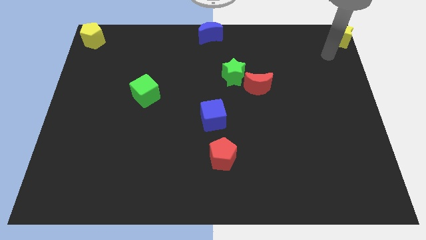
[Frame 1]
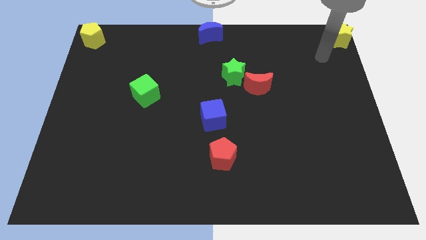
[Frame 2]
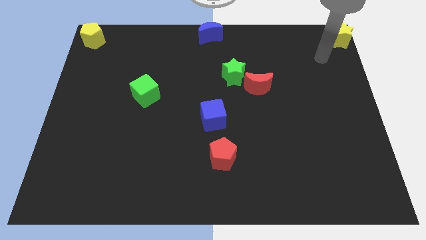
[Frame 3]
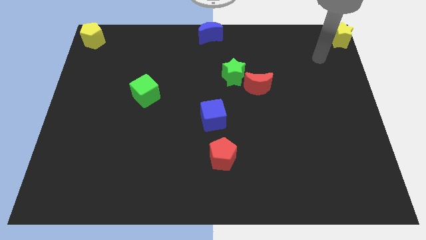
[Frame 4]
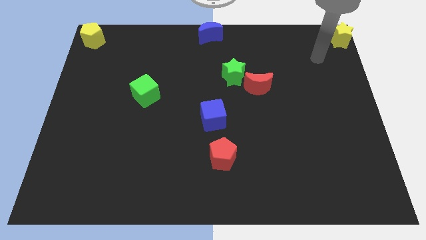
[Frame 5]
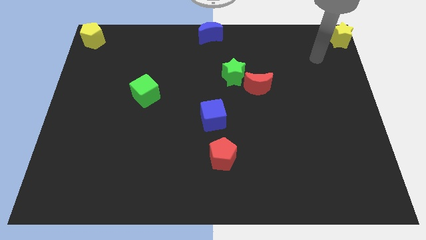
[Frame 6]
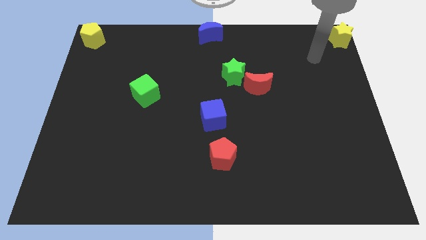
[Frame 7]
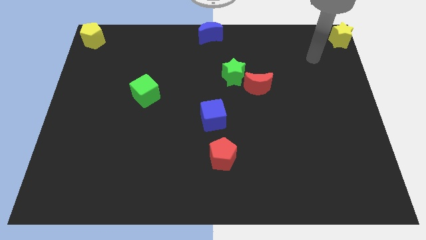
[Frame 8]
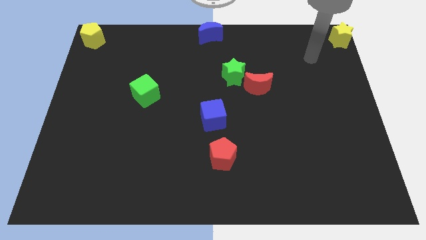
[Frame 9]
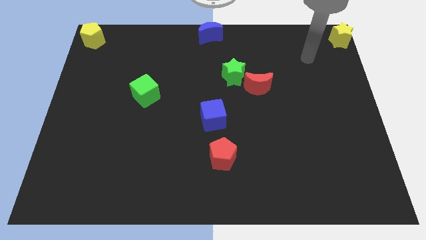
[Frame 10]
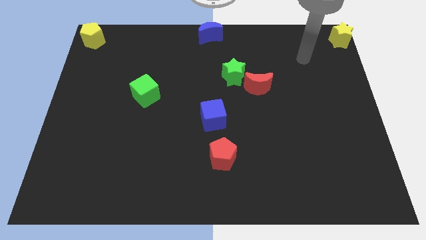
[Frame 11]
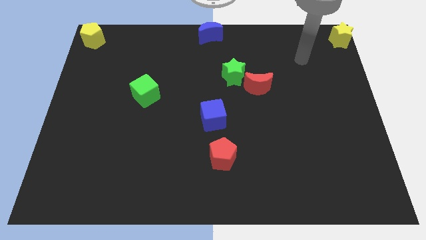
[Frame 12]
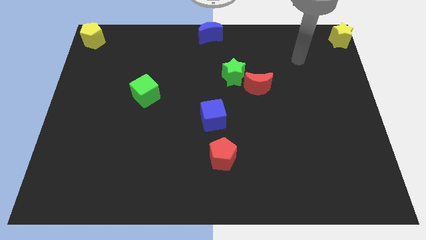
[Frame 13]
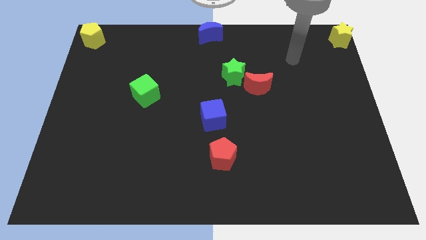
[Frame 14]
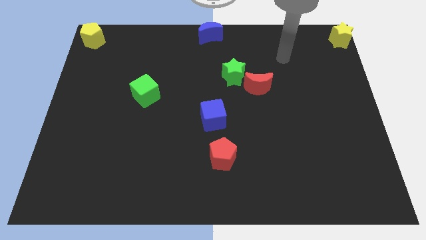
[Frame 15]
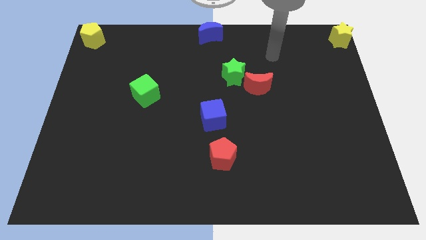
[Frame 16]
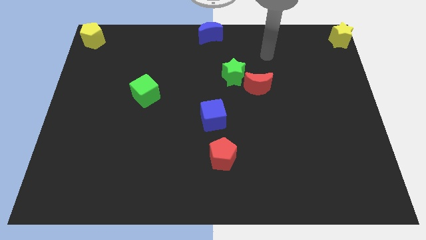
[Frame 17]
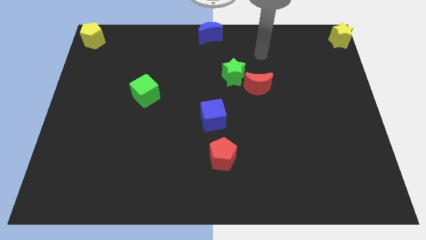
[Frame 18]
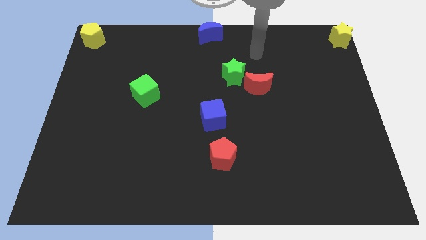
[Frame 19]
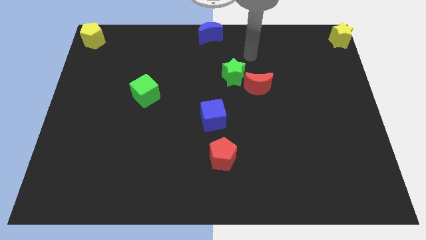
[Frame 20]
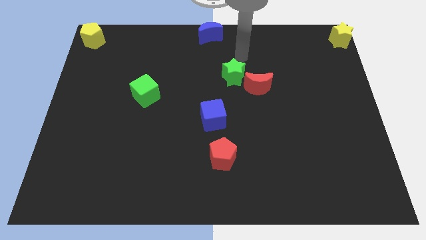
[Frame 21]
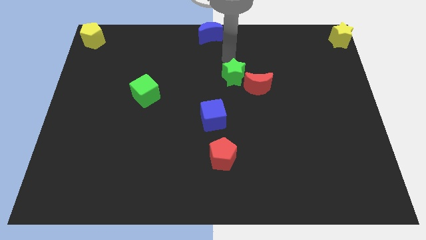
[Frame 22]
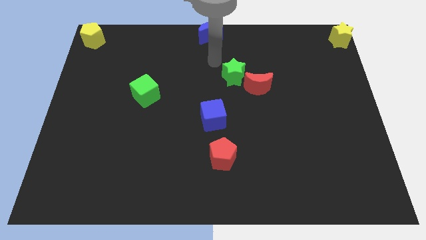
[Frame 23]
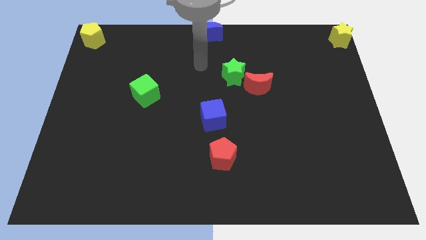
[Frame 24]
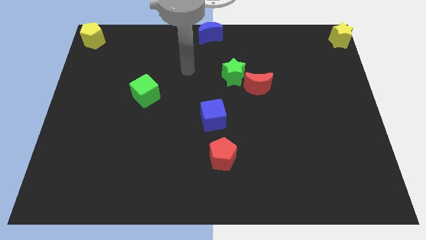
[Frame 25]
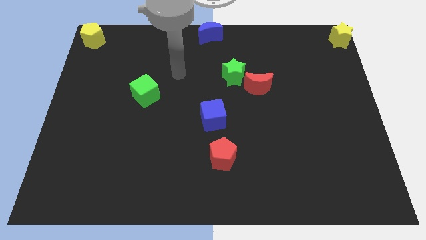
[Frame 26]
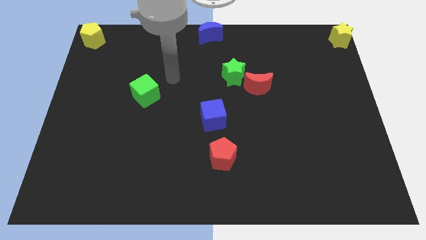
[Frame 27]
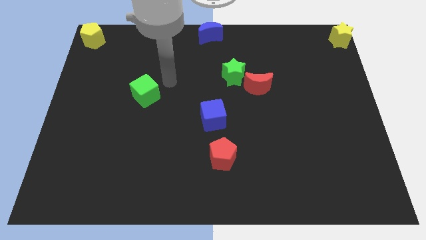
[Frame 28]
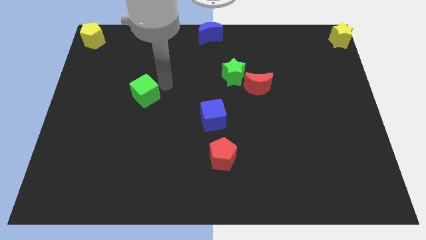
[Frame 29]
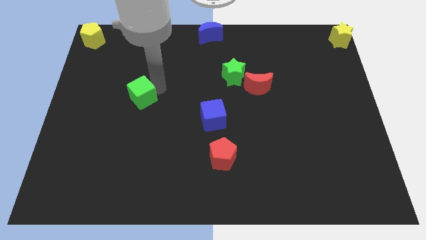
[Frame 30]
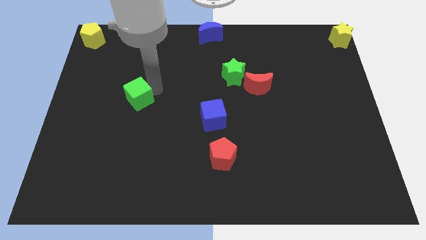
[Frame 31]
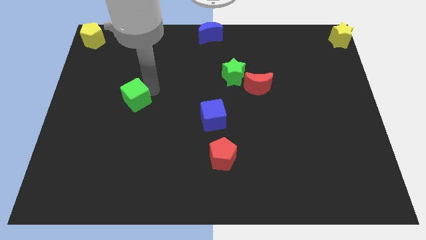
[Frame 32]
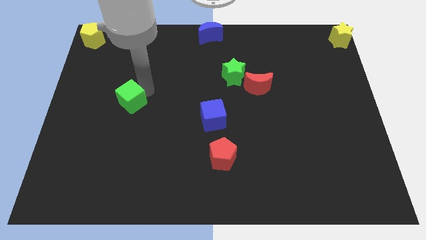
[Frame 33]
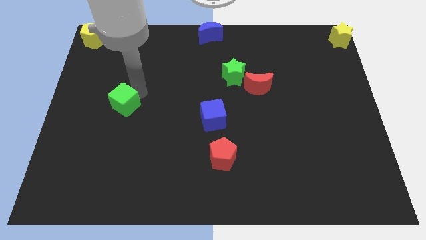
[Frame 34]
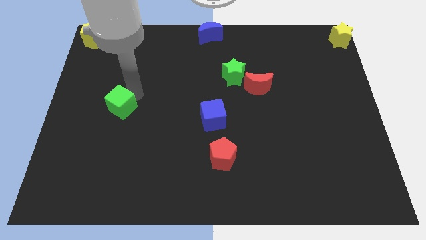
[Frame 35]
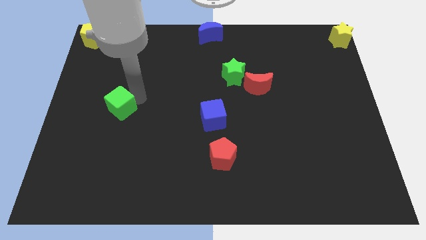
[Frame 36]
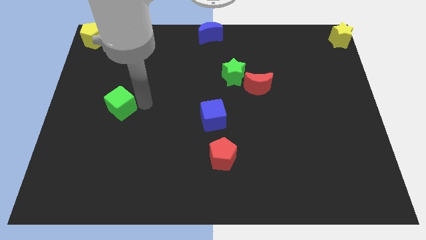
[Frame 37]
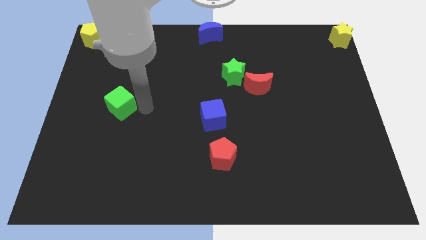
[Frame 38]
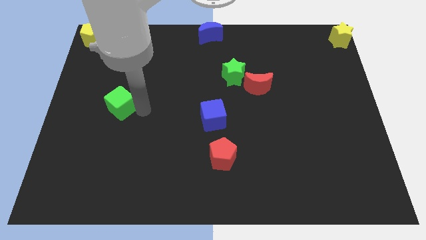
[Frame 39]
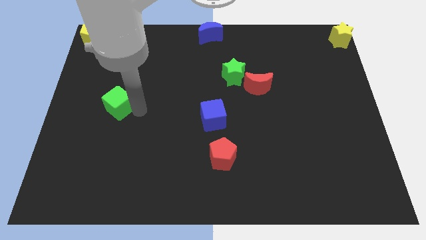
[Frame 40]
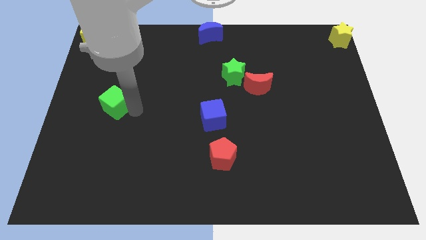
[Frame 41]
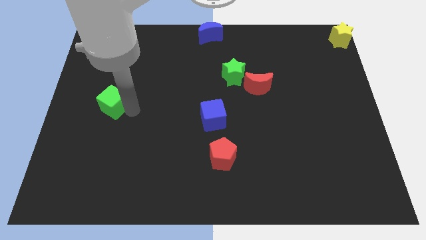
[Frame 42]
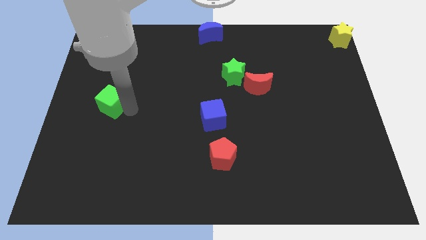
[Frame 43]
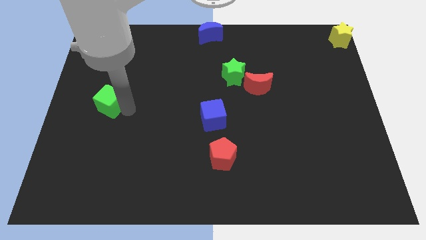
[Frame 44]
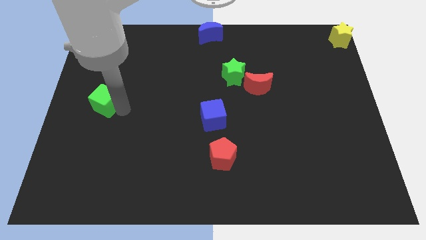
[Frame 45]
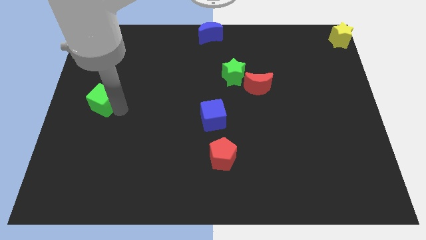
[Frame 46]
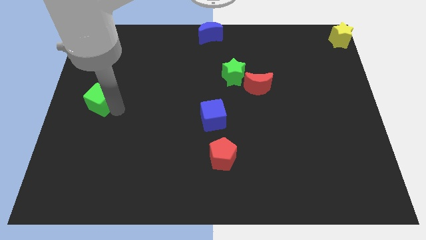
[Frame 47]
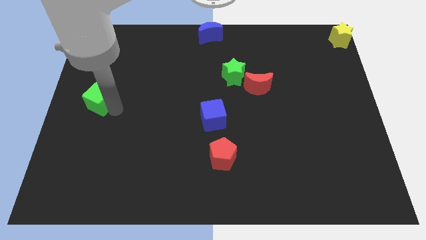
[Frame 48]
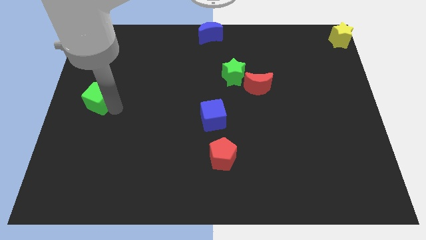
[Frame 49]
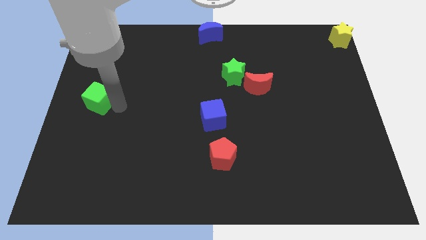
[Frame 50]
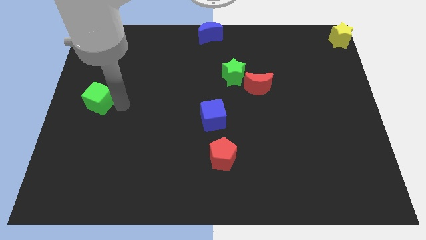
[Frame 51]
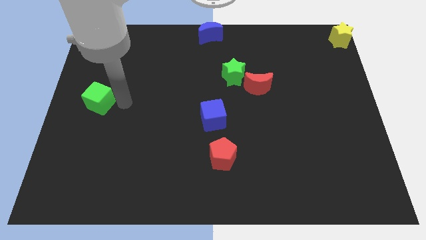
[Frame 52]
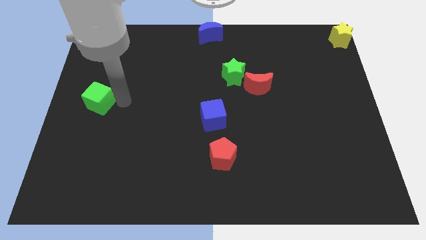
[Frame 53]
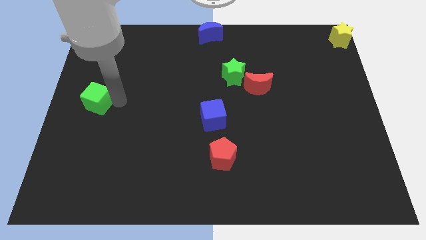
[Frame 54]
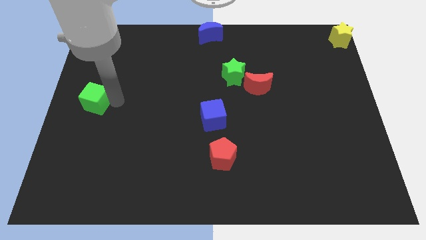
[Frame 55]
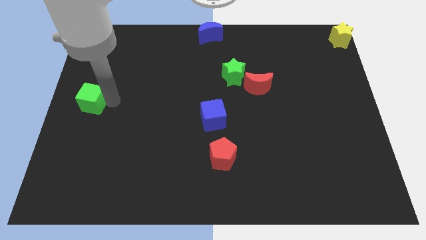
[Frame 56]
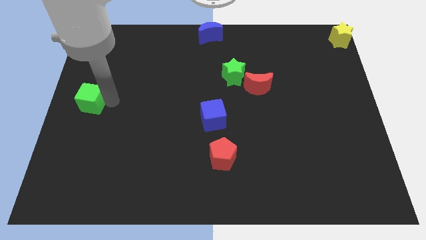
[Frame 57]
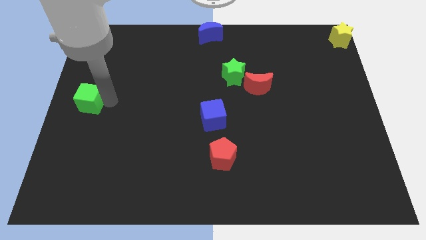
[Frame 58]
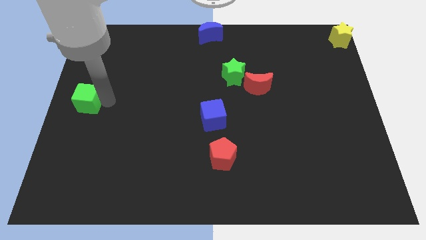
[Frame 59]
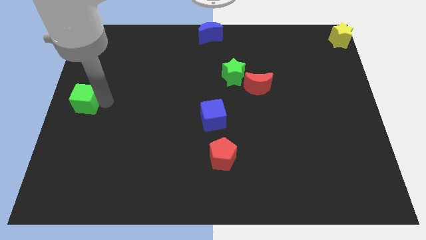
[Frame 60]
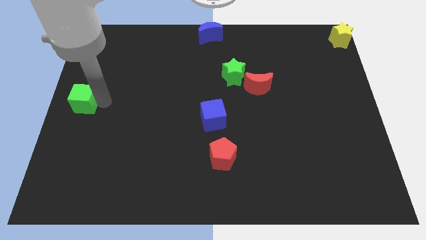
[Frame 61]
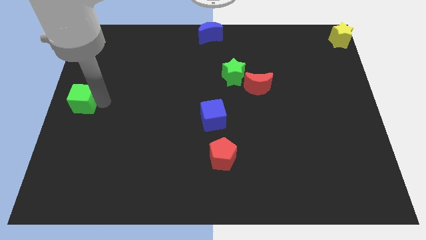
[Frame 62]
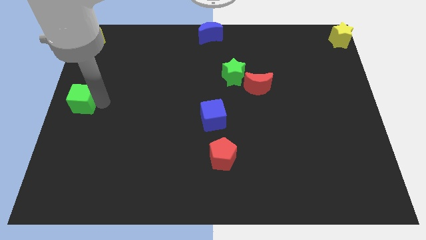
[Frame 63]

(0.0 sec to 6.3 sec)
move the green cube to the left center of the board

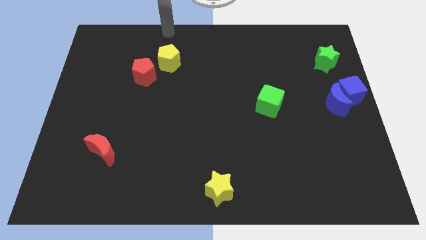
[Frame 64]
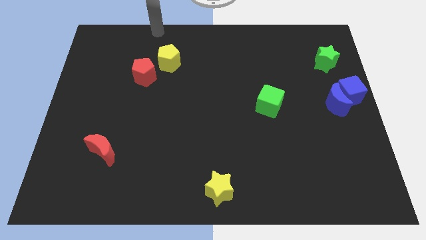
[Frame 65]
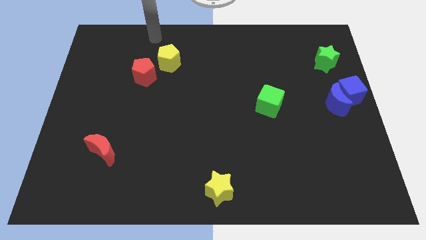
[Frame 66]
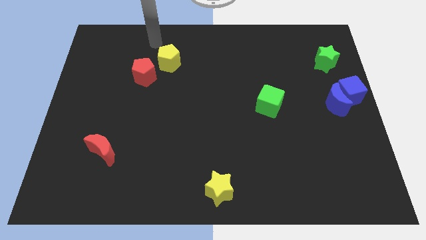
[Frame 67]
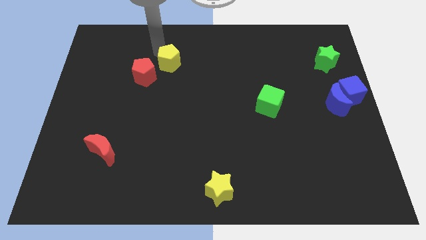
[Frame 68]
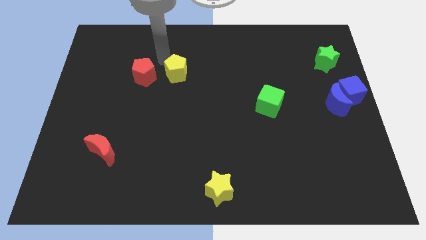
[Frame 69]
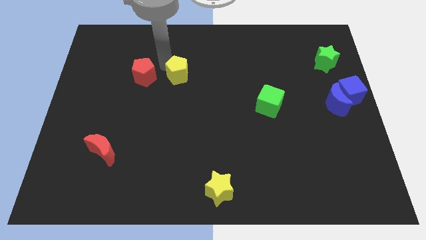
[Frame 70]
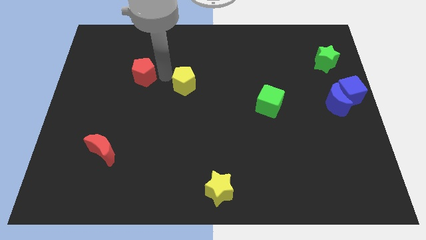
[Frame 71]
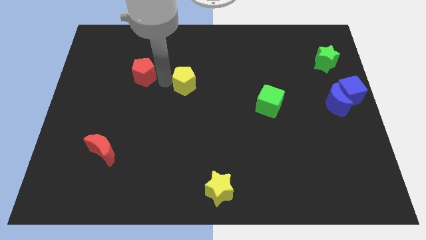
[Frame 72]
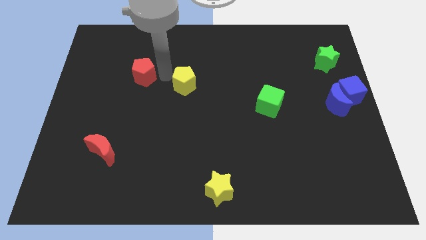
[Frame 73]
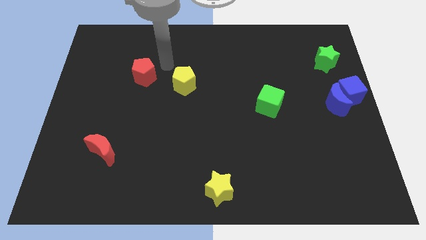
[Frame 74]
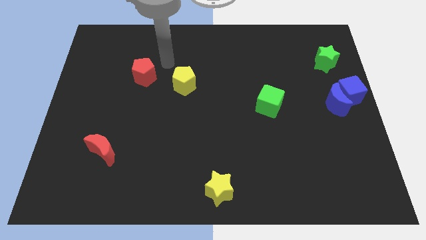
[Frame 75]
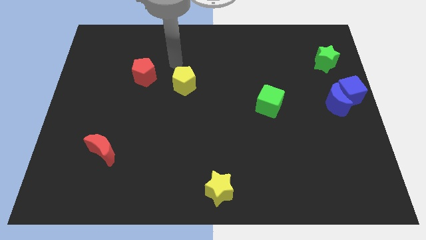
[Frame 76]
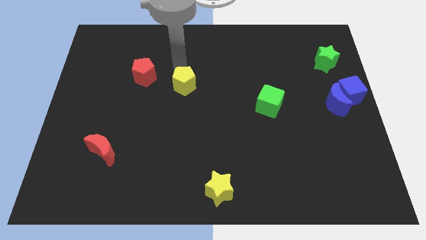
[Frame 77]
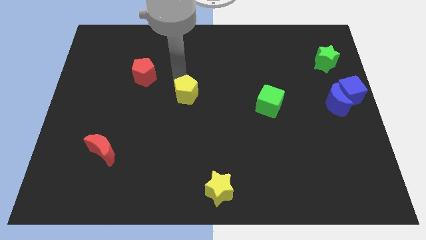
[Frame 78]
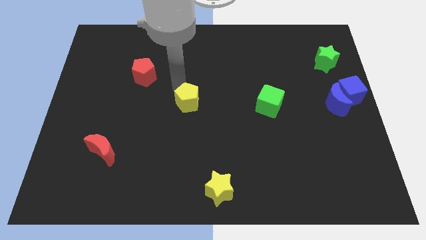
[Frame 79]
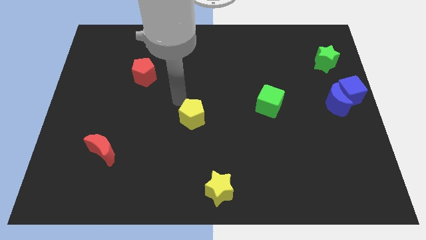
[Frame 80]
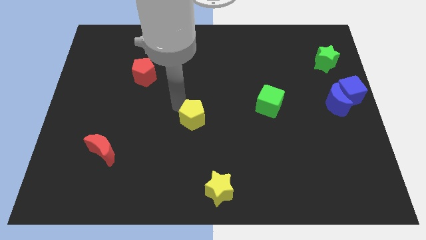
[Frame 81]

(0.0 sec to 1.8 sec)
place the yellow pentagon diagonally top right to red moon

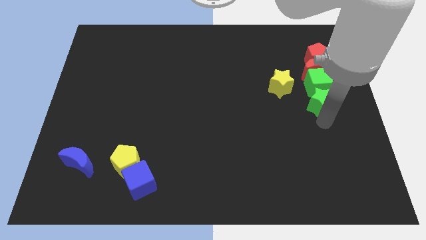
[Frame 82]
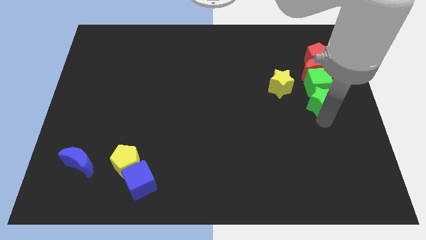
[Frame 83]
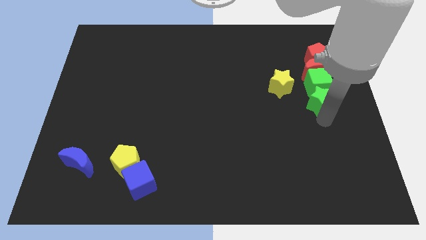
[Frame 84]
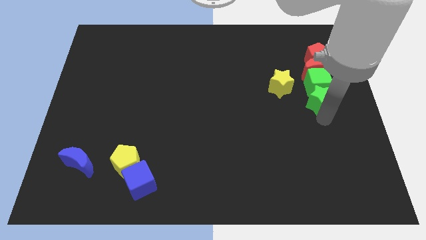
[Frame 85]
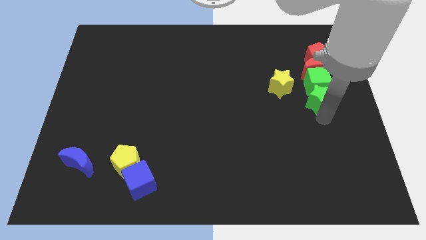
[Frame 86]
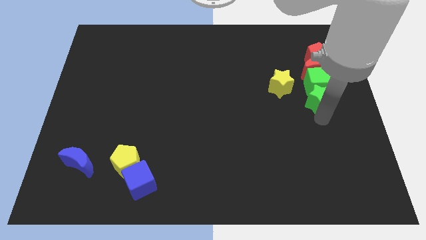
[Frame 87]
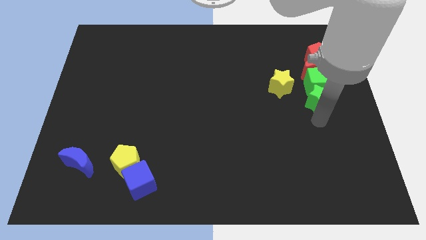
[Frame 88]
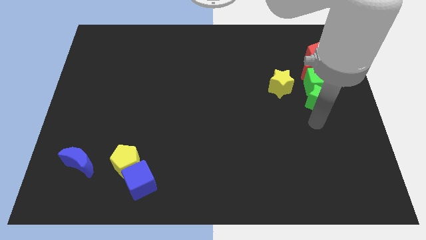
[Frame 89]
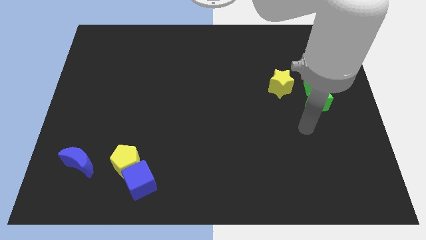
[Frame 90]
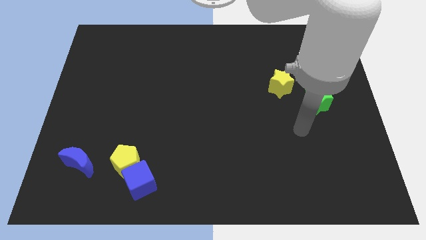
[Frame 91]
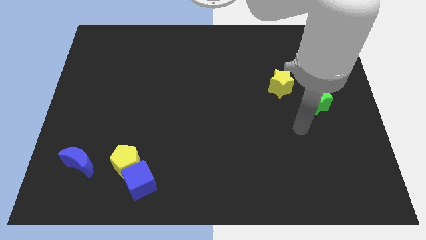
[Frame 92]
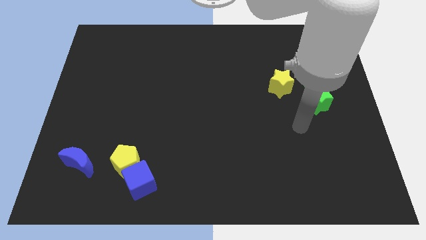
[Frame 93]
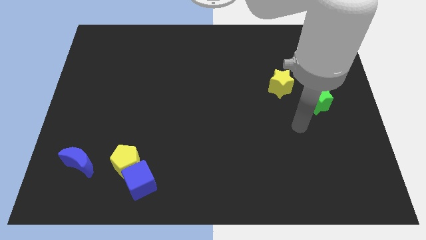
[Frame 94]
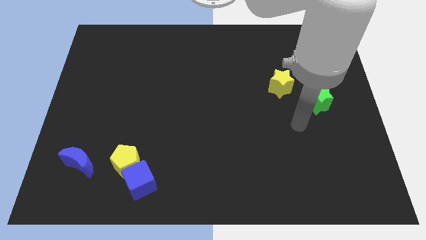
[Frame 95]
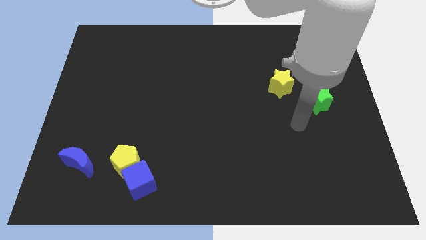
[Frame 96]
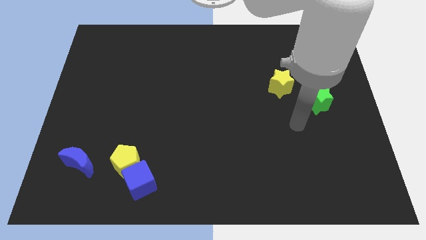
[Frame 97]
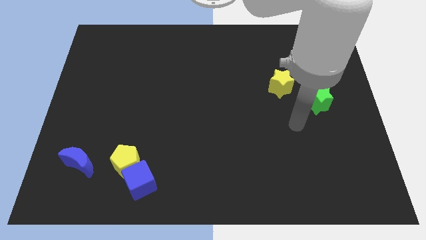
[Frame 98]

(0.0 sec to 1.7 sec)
move your arm away from green star
